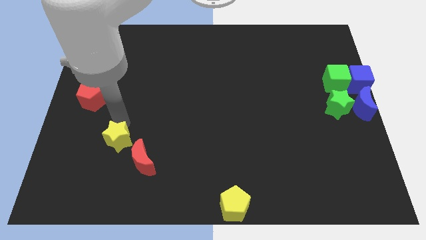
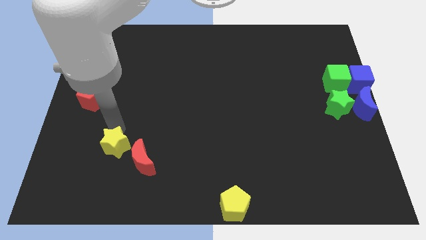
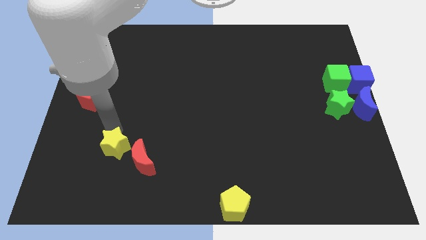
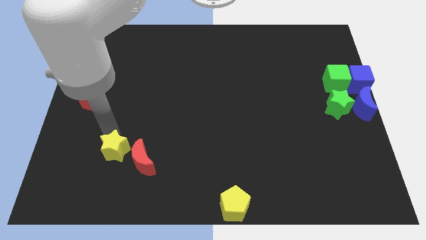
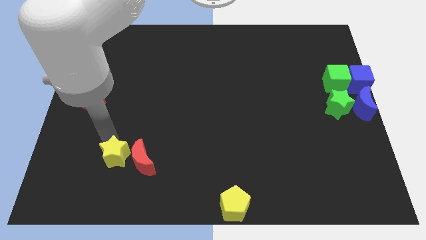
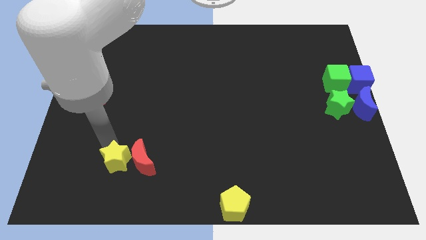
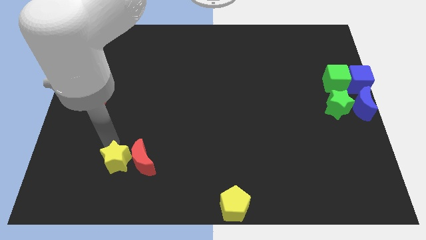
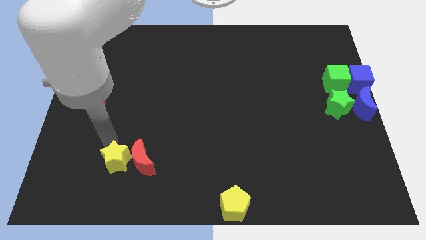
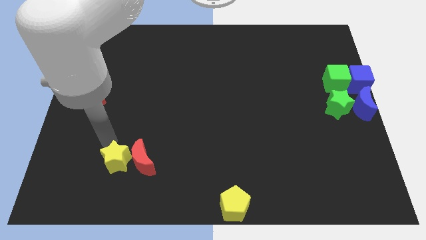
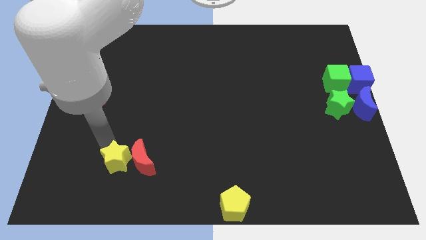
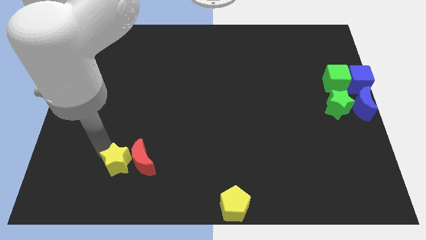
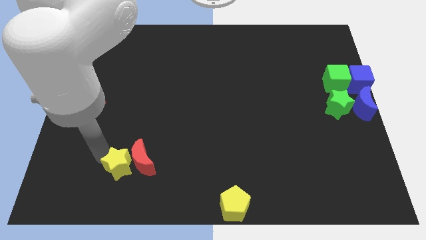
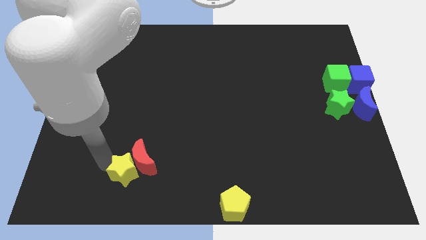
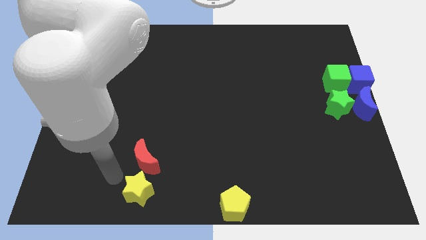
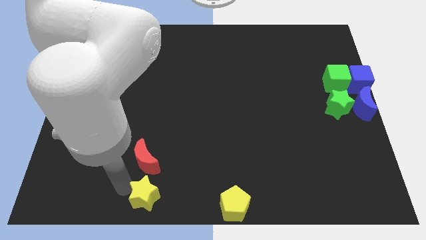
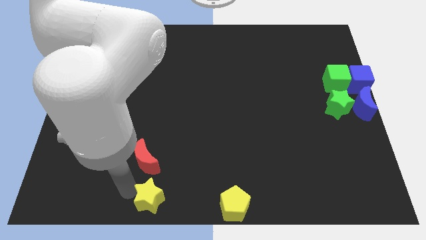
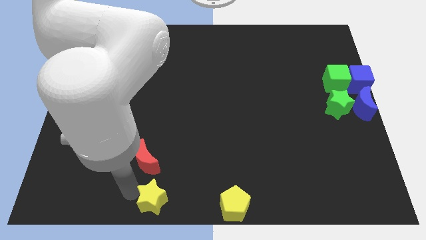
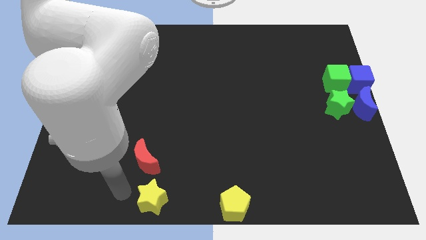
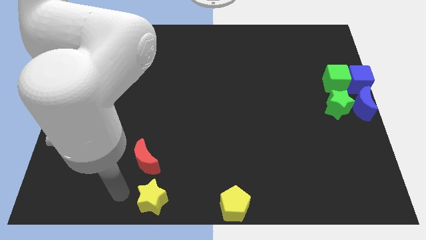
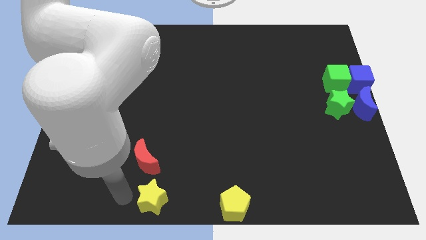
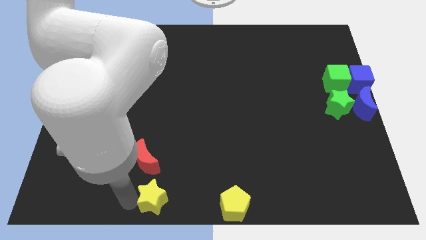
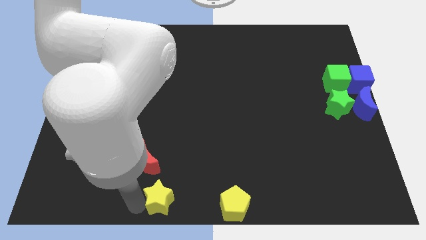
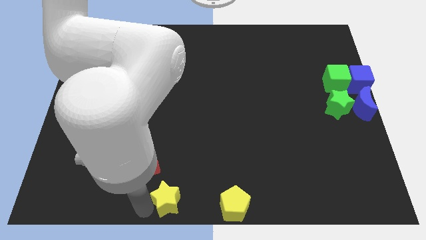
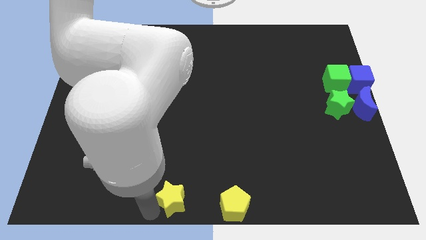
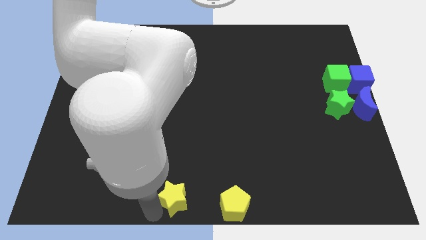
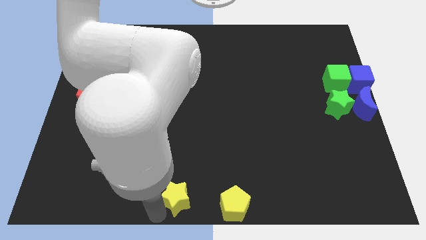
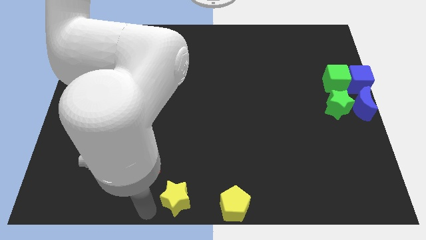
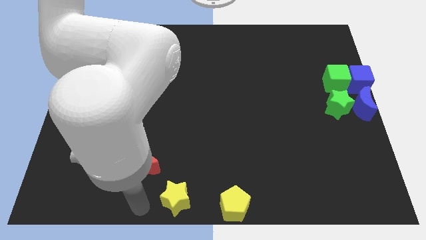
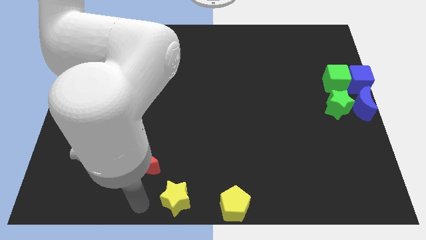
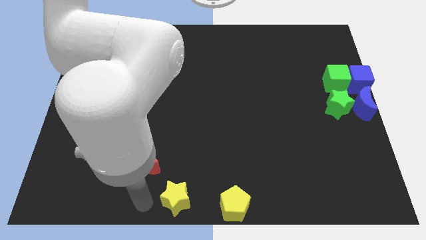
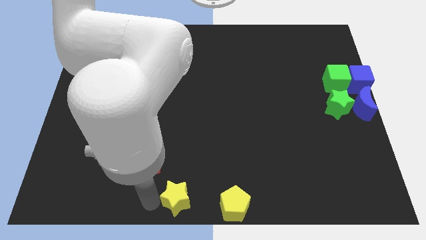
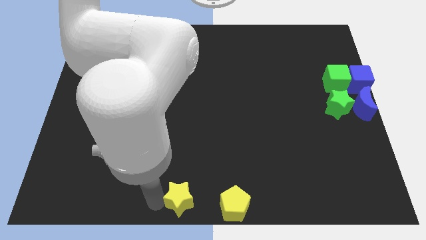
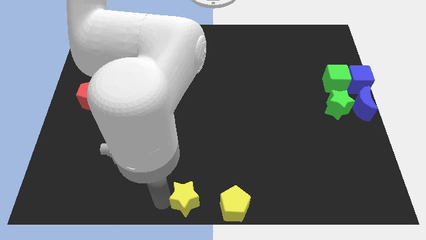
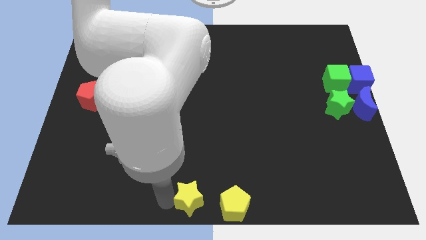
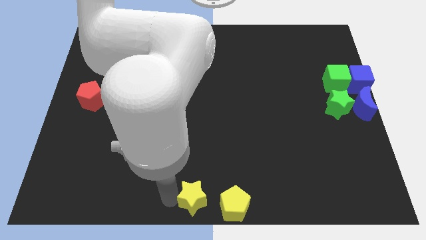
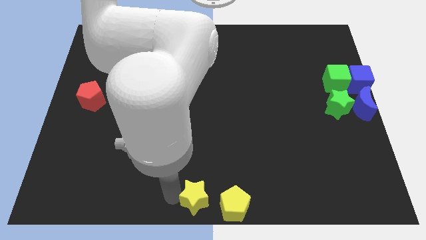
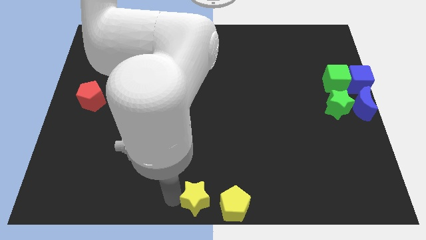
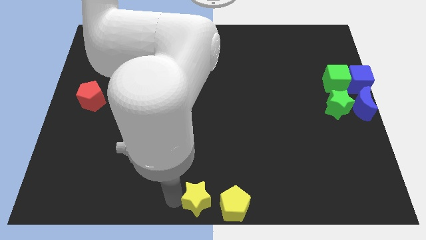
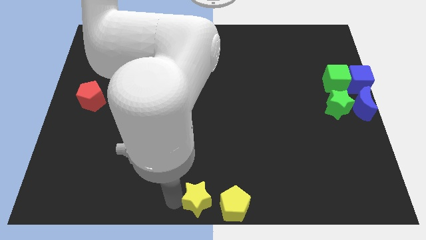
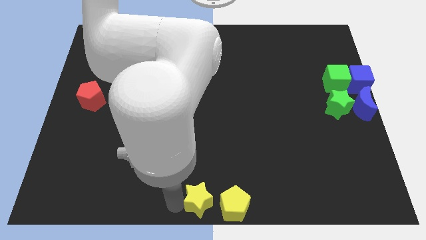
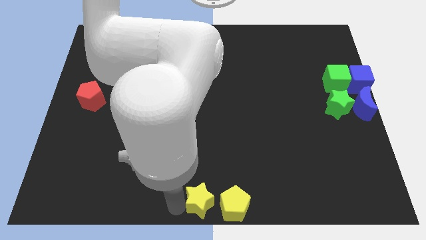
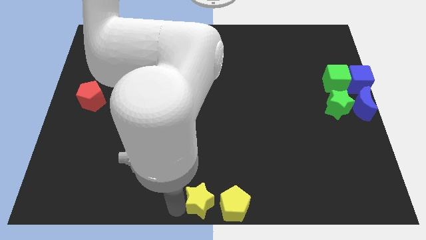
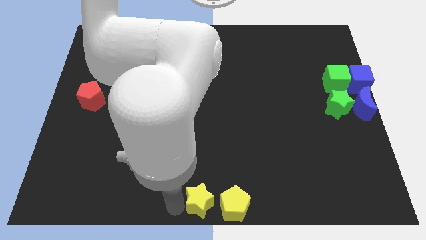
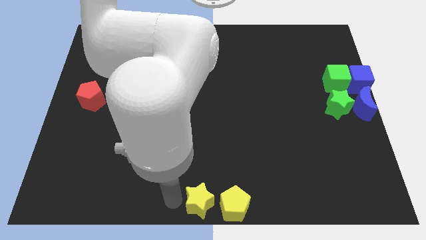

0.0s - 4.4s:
place the yellow star to the left of the yellow pentagon

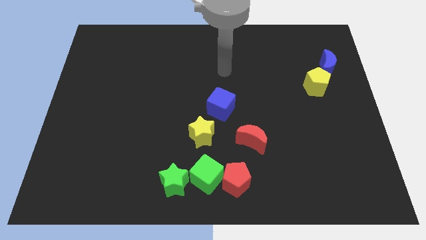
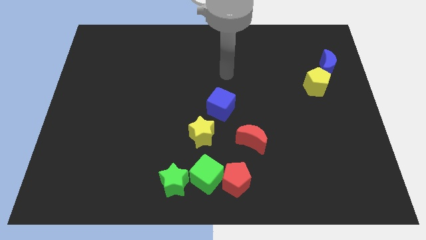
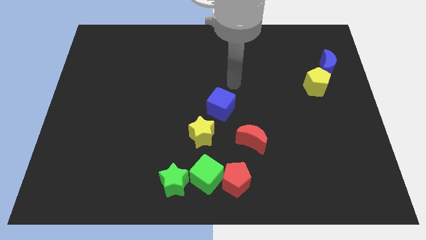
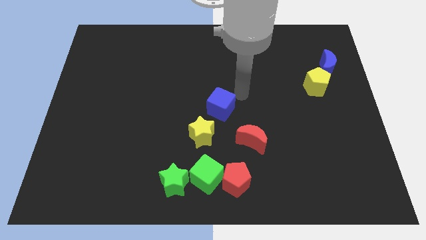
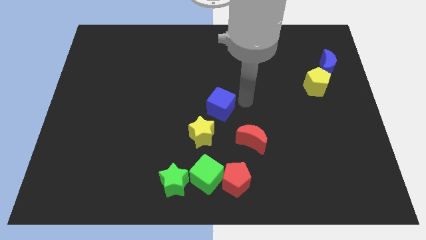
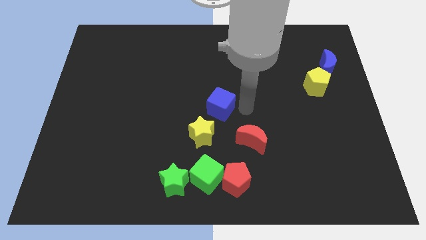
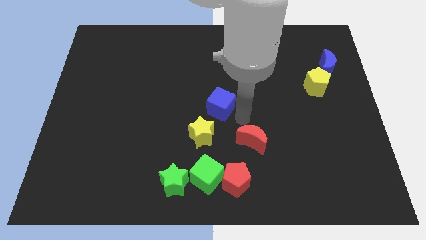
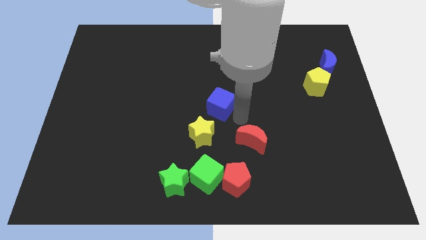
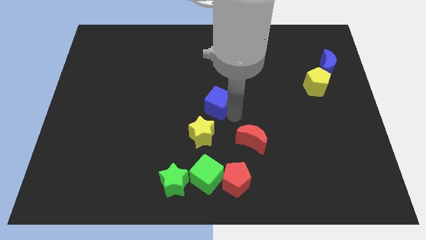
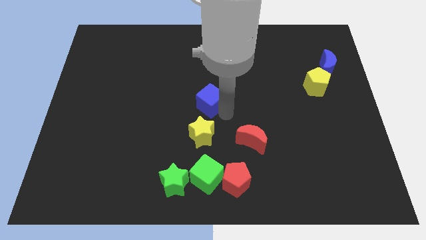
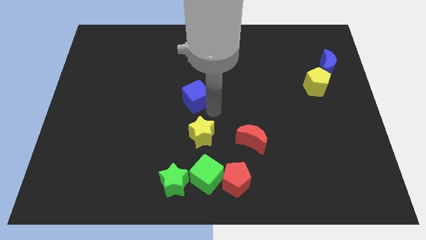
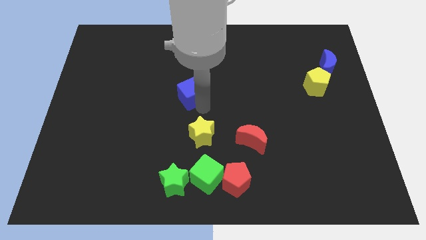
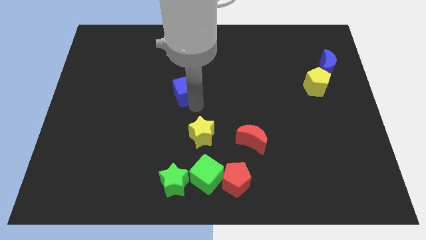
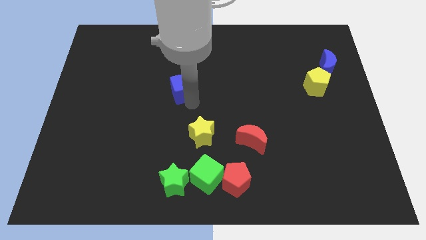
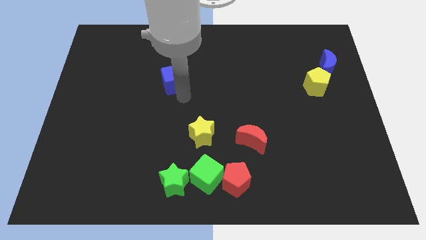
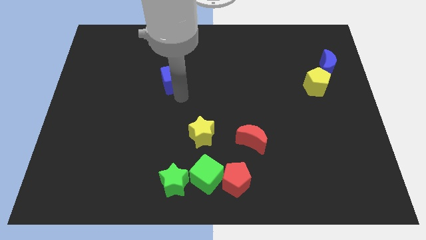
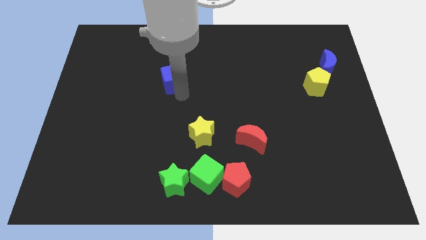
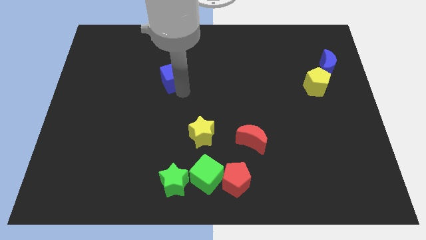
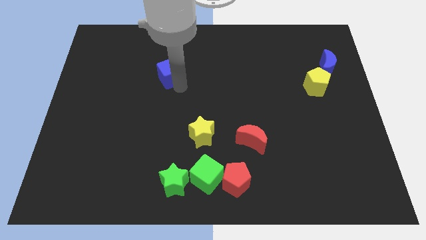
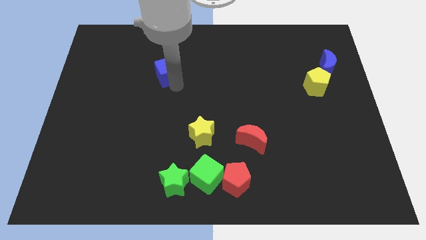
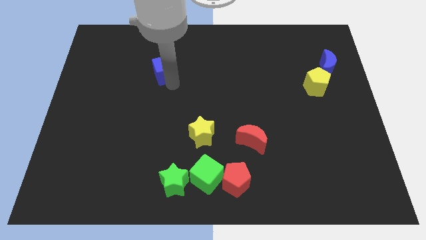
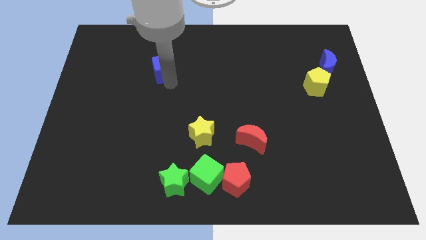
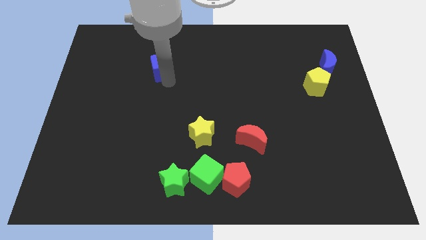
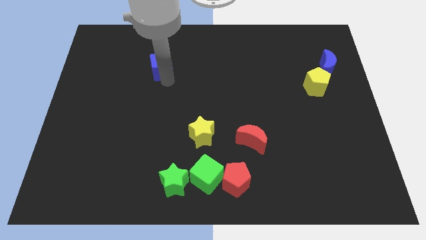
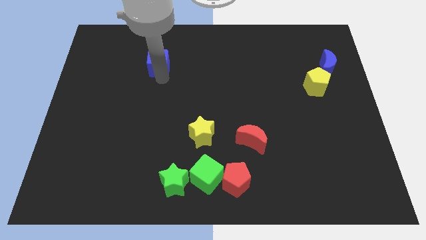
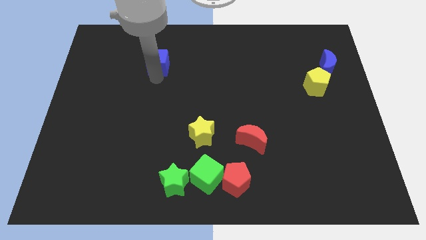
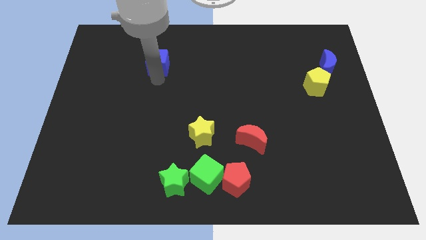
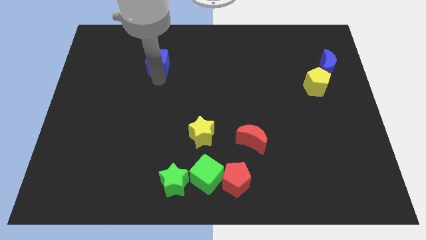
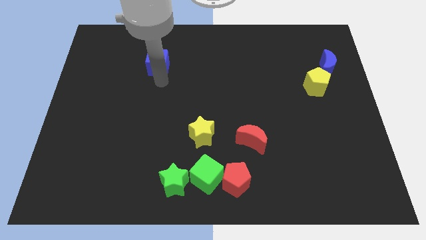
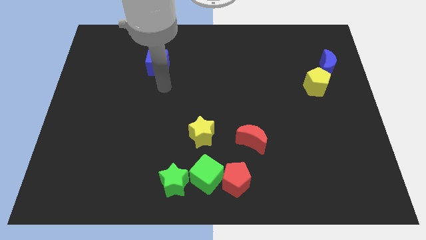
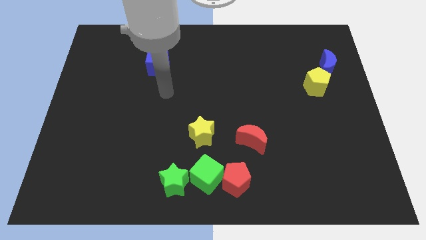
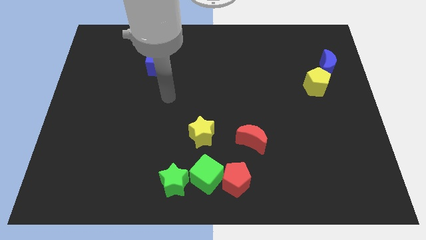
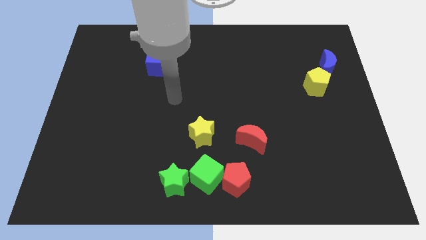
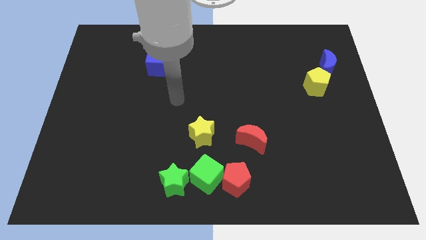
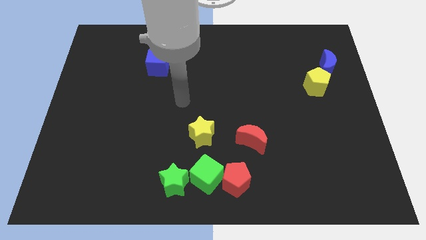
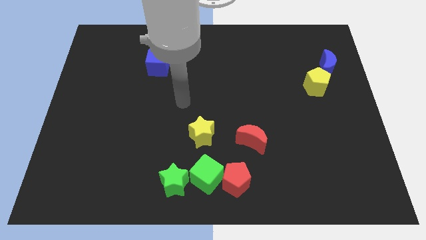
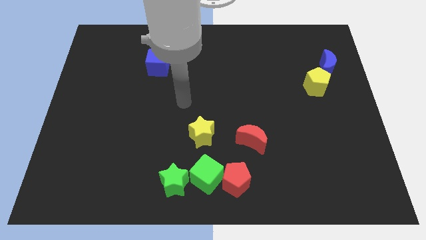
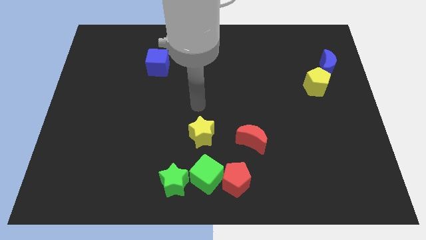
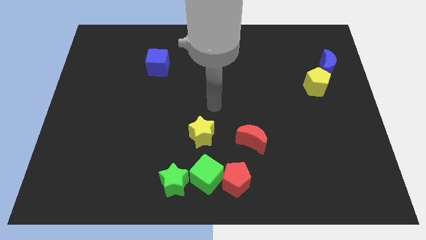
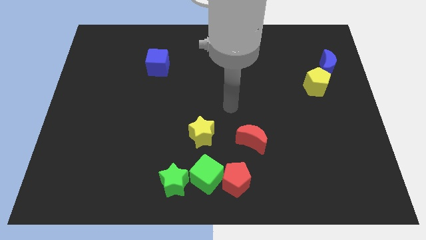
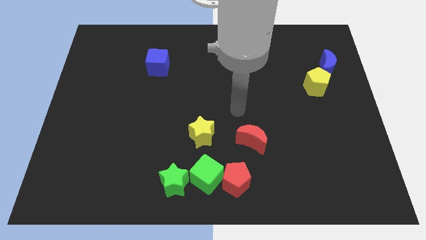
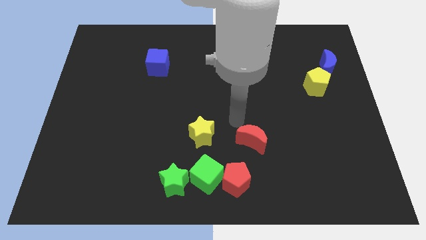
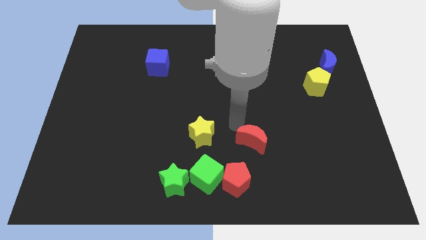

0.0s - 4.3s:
move the blue cube towards the top right of the board
